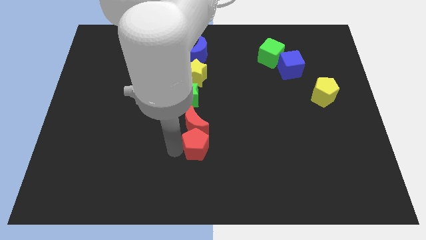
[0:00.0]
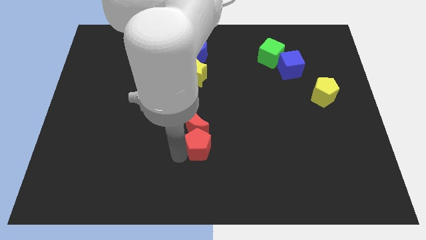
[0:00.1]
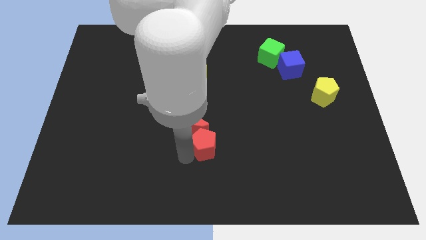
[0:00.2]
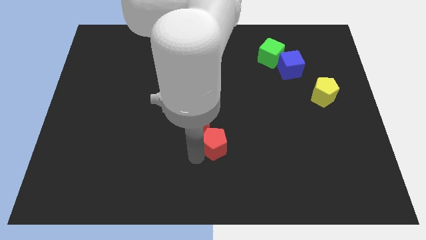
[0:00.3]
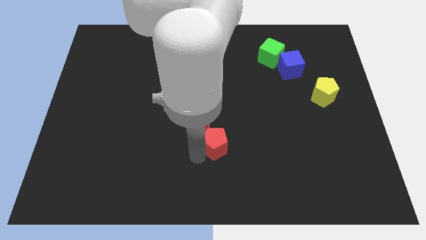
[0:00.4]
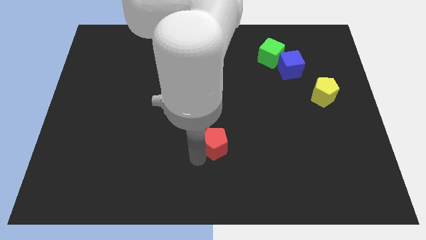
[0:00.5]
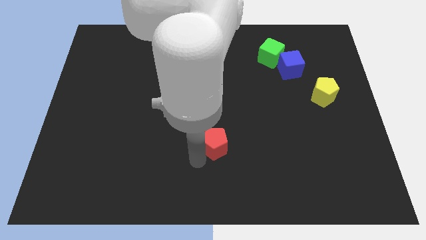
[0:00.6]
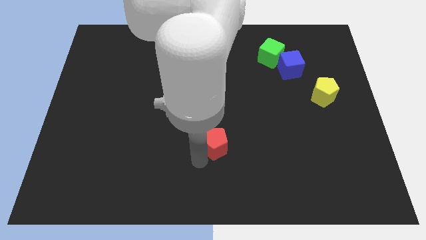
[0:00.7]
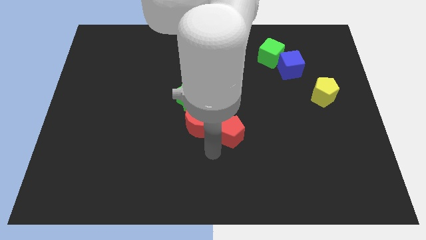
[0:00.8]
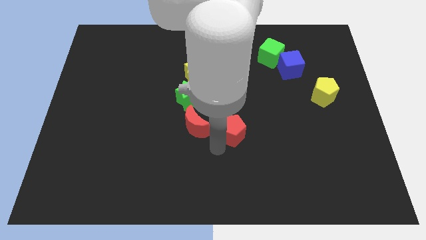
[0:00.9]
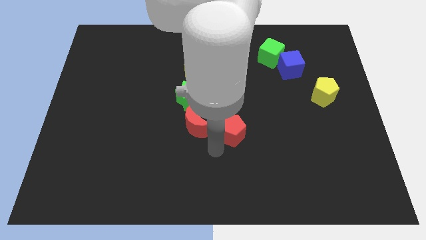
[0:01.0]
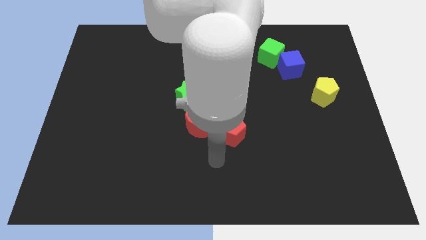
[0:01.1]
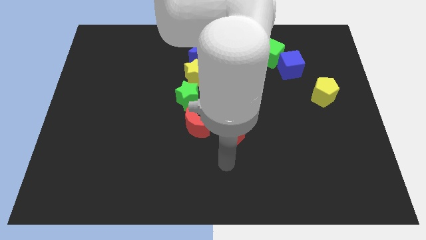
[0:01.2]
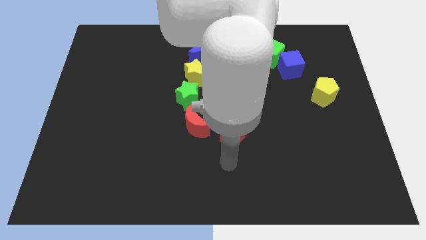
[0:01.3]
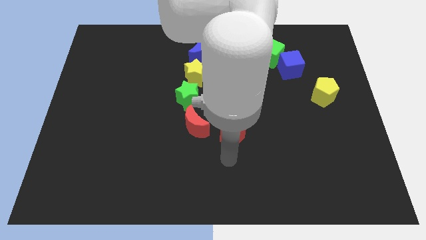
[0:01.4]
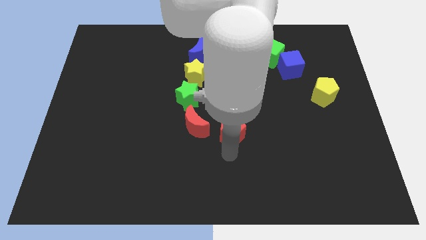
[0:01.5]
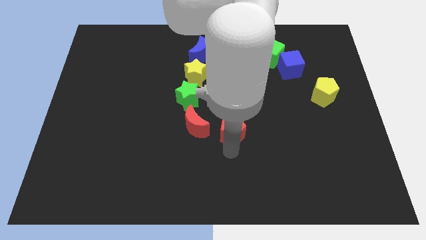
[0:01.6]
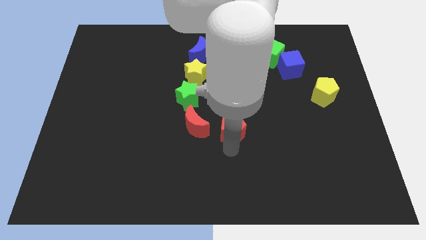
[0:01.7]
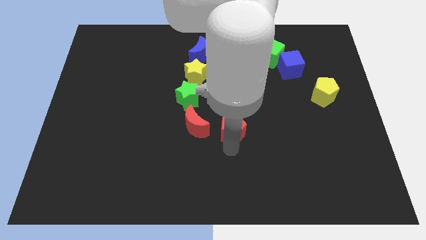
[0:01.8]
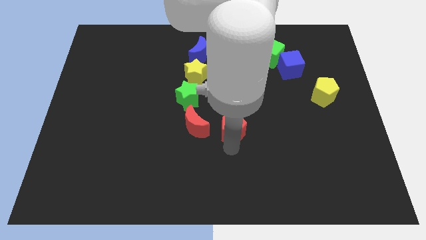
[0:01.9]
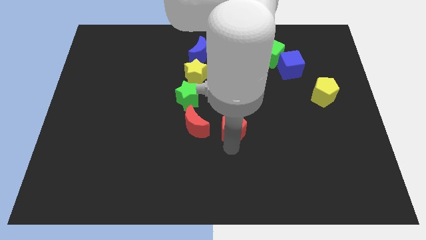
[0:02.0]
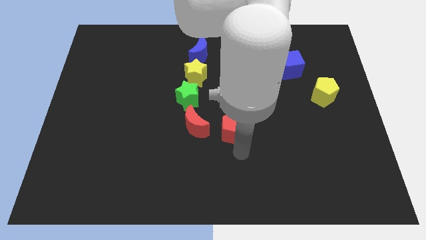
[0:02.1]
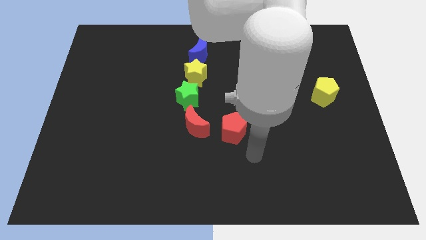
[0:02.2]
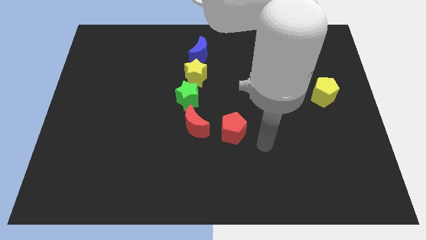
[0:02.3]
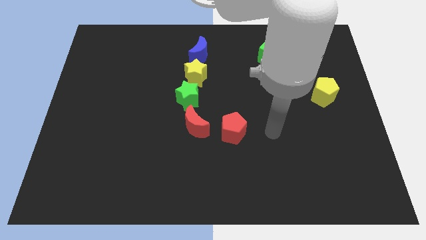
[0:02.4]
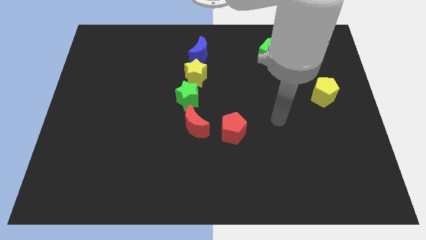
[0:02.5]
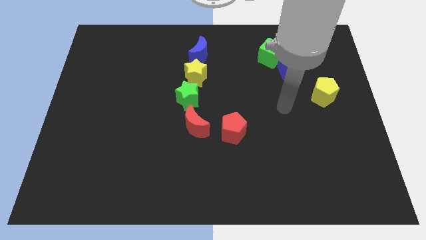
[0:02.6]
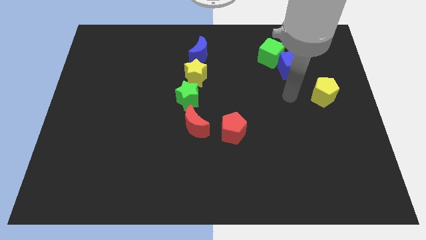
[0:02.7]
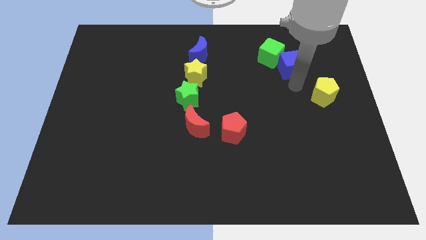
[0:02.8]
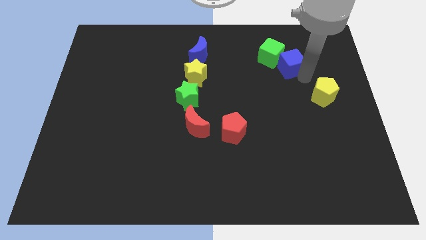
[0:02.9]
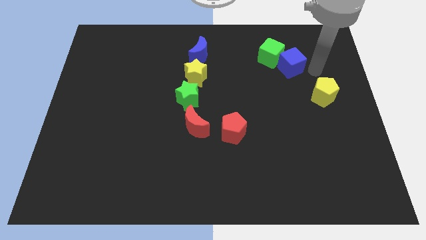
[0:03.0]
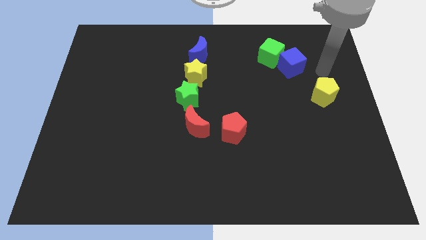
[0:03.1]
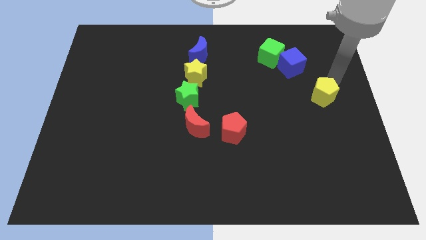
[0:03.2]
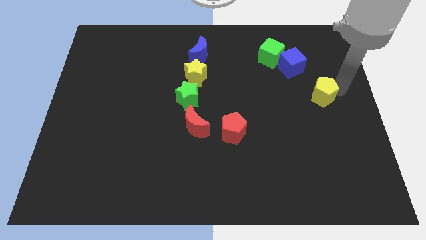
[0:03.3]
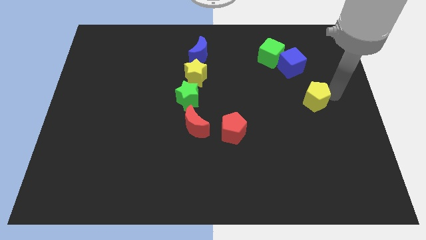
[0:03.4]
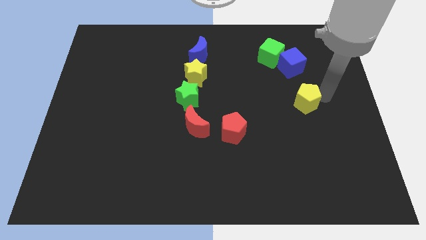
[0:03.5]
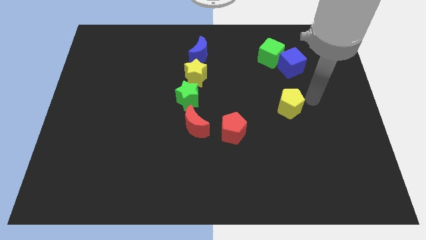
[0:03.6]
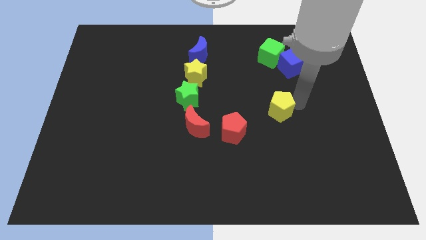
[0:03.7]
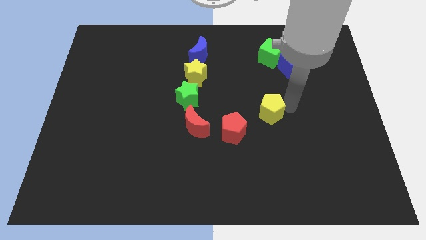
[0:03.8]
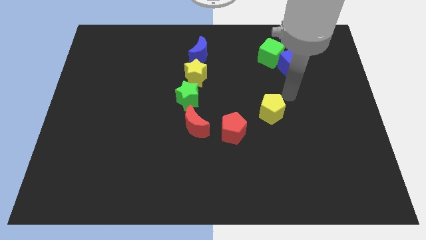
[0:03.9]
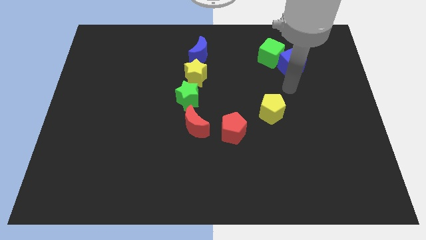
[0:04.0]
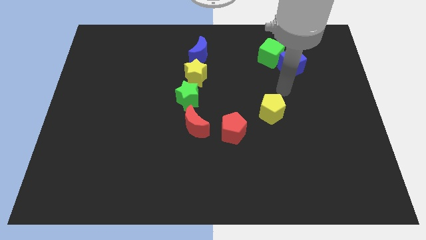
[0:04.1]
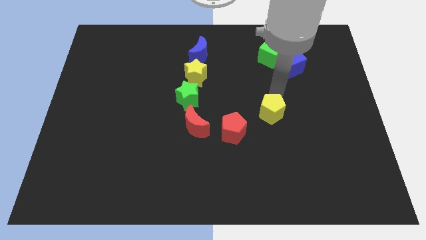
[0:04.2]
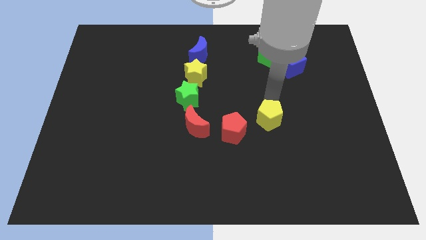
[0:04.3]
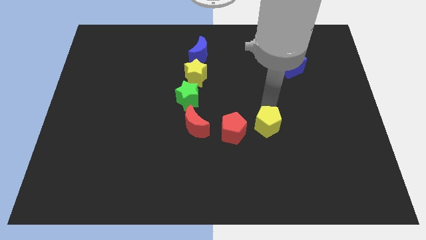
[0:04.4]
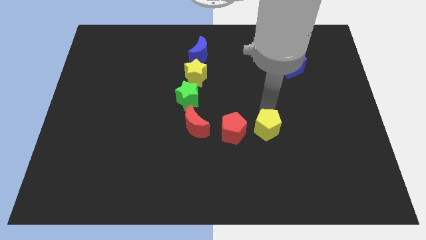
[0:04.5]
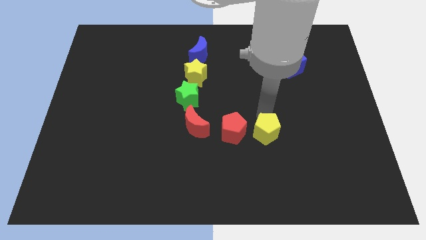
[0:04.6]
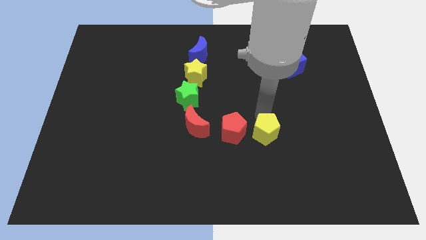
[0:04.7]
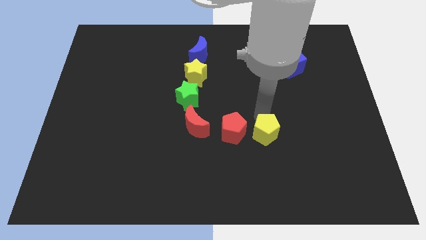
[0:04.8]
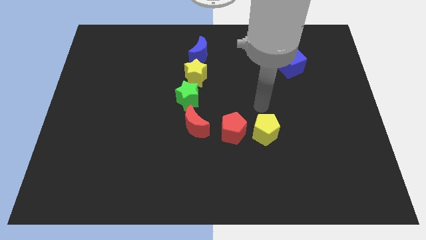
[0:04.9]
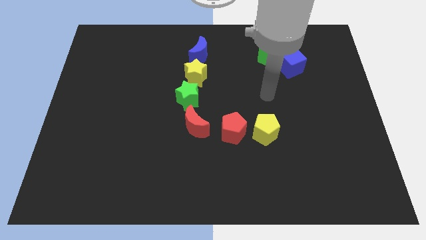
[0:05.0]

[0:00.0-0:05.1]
put the yellow pentagon to the right of the red pentagon

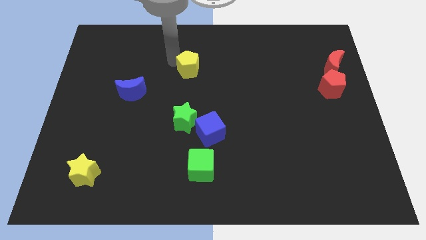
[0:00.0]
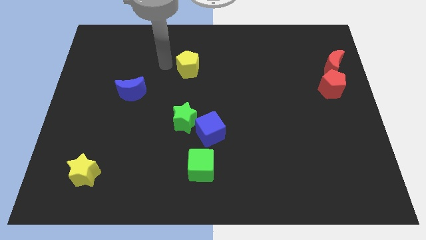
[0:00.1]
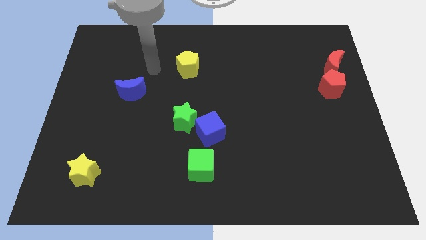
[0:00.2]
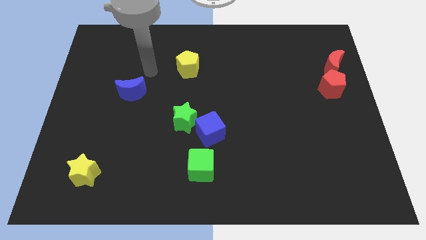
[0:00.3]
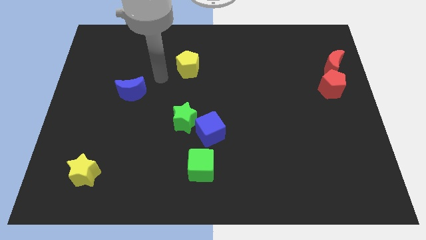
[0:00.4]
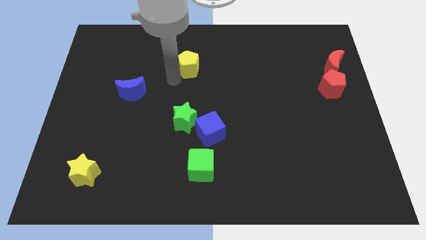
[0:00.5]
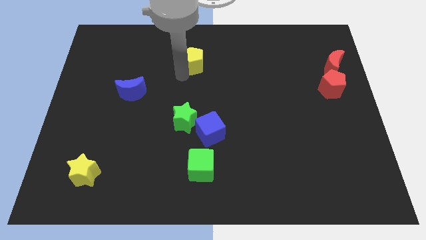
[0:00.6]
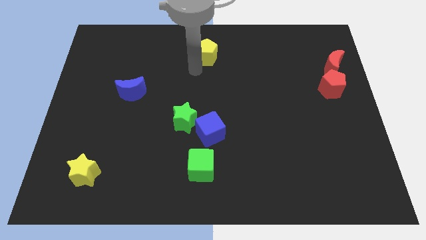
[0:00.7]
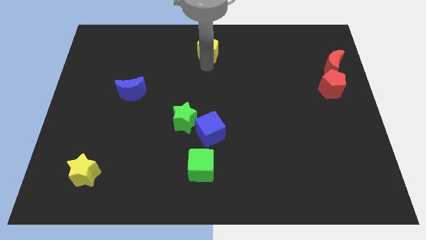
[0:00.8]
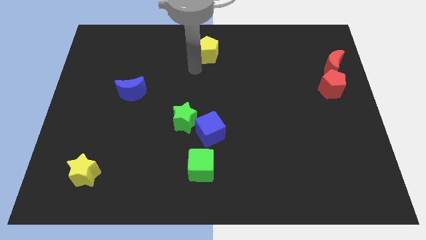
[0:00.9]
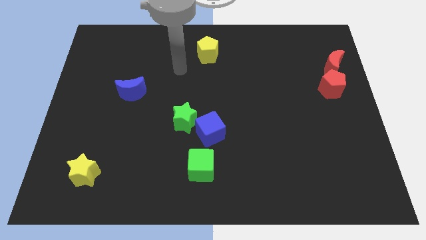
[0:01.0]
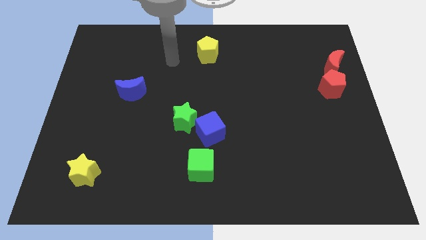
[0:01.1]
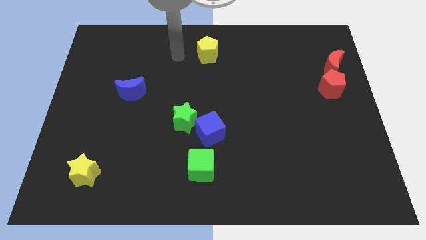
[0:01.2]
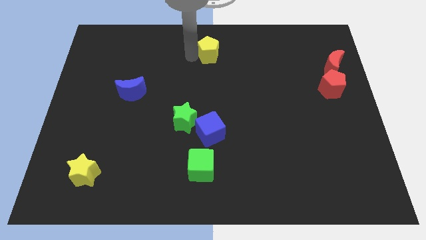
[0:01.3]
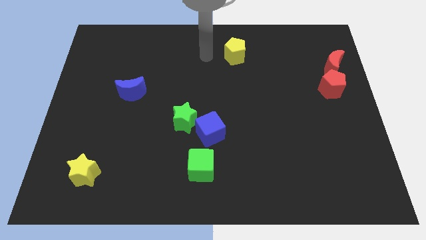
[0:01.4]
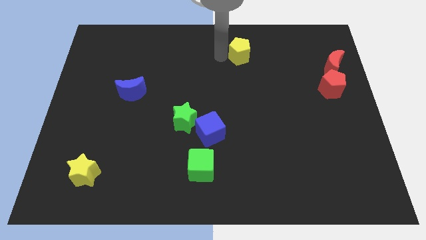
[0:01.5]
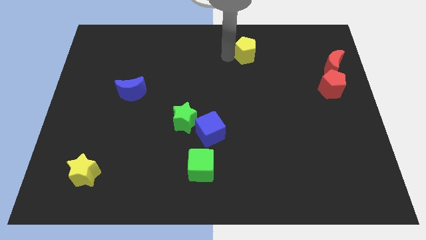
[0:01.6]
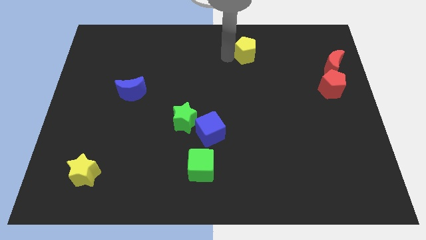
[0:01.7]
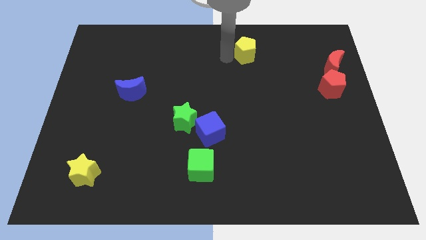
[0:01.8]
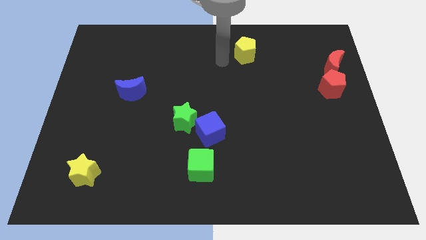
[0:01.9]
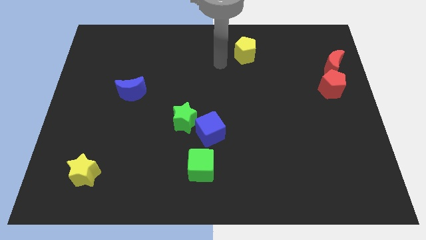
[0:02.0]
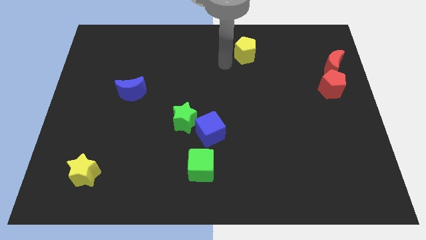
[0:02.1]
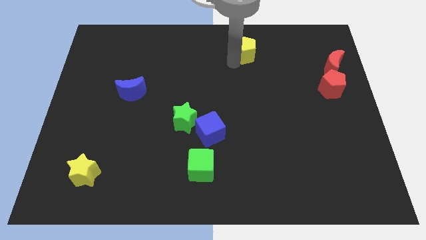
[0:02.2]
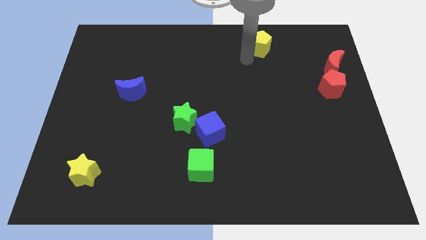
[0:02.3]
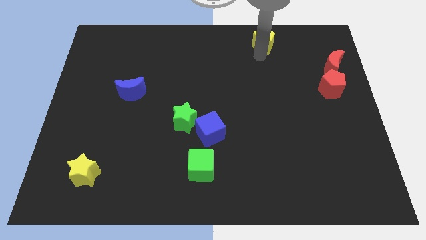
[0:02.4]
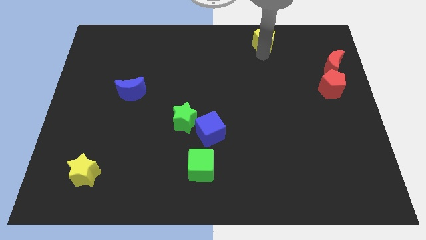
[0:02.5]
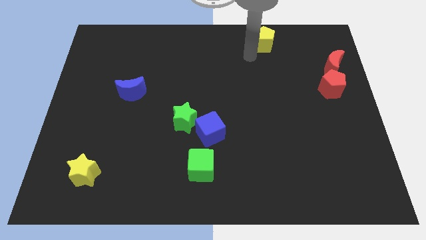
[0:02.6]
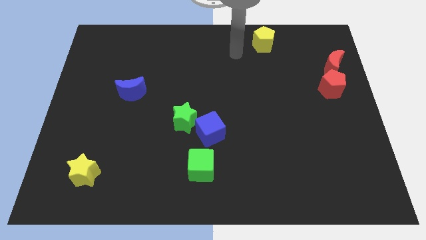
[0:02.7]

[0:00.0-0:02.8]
push yellow pentagon top center

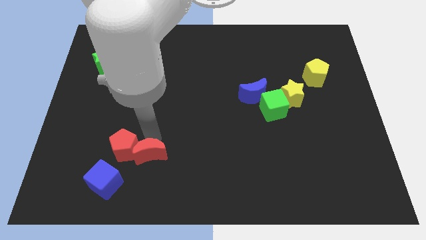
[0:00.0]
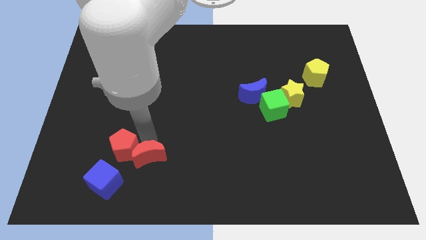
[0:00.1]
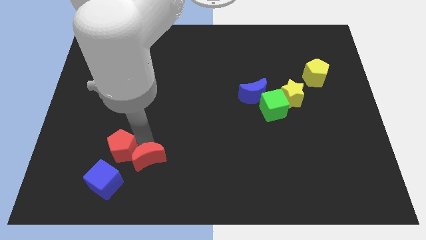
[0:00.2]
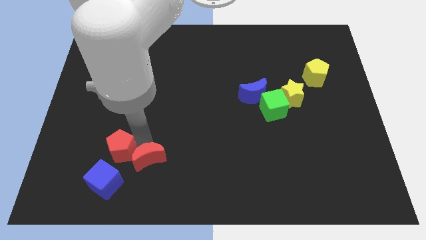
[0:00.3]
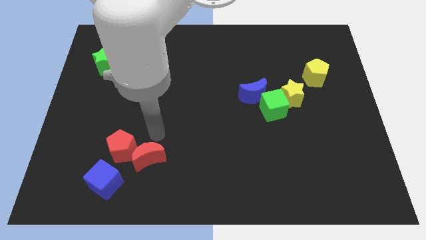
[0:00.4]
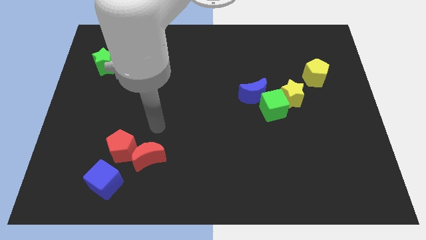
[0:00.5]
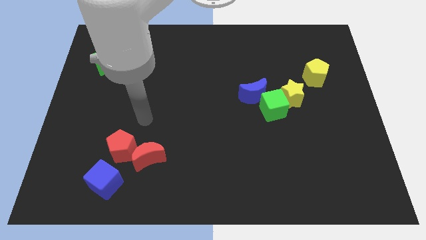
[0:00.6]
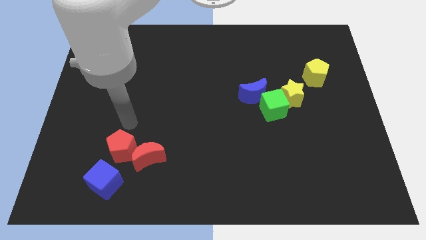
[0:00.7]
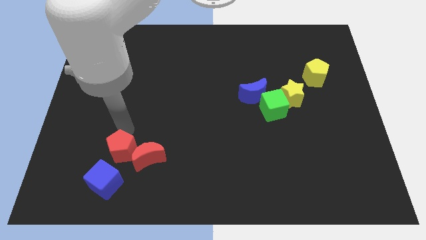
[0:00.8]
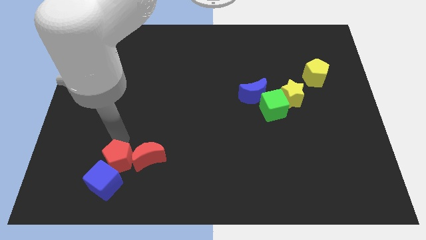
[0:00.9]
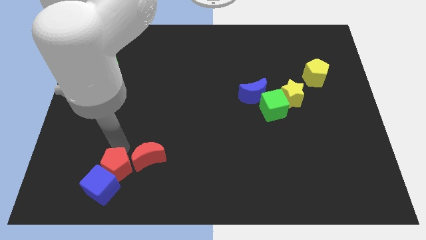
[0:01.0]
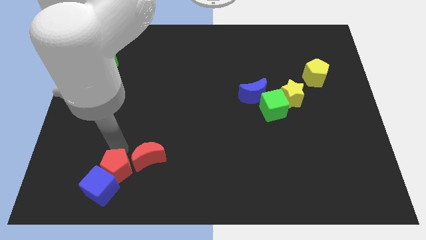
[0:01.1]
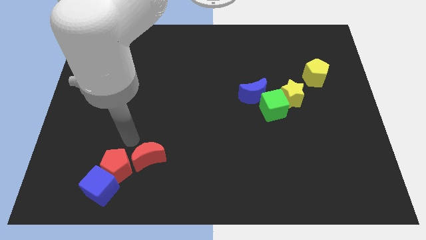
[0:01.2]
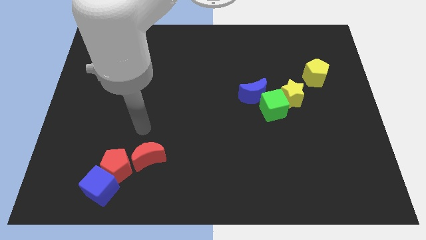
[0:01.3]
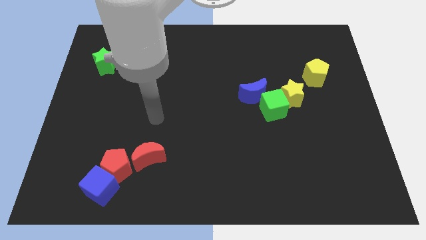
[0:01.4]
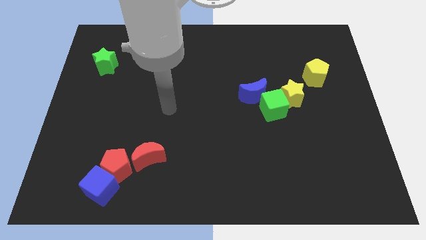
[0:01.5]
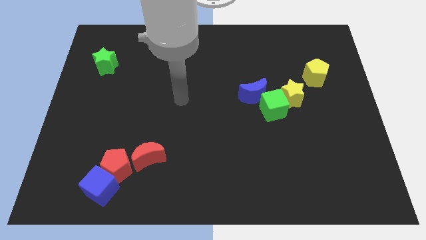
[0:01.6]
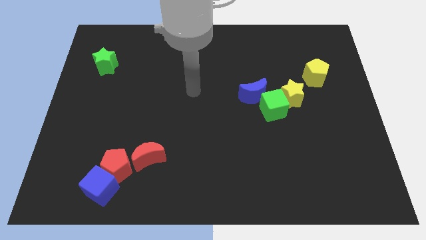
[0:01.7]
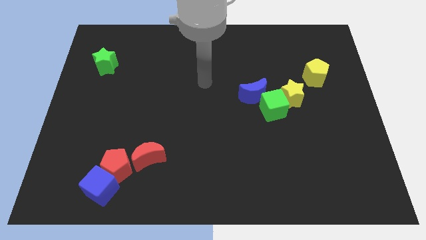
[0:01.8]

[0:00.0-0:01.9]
push red pentagon into blue cube
